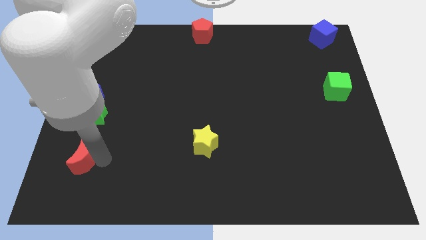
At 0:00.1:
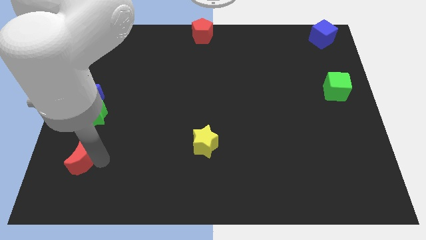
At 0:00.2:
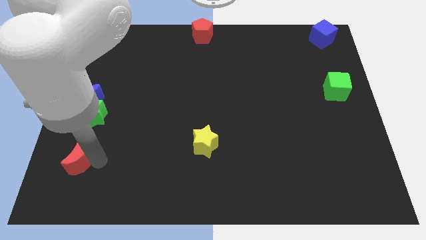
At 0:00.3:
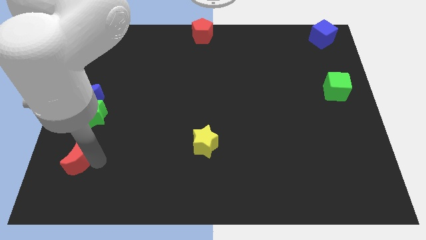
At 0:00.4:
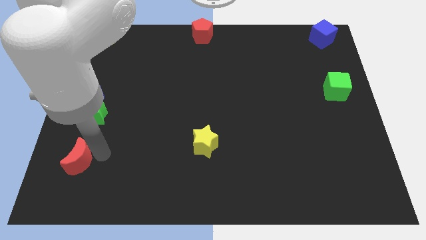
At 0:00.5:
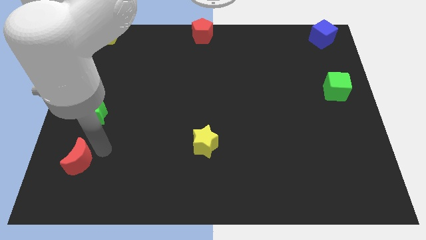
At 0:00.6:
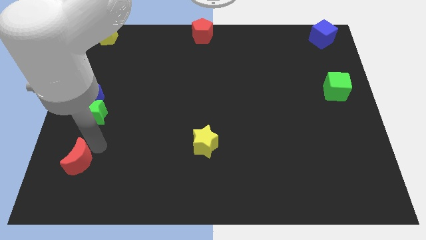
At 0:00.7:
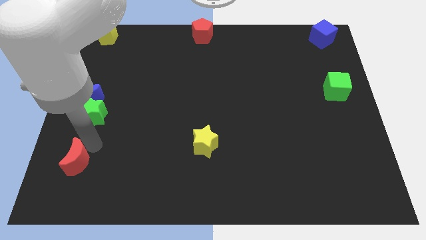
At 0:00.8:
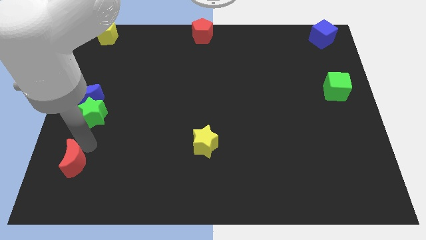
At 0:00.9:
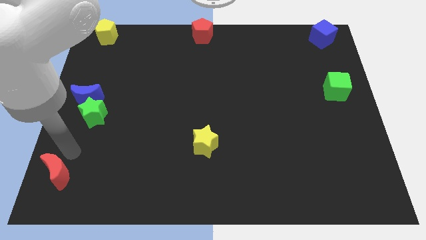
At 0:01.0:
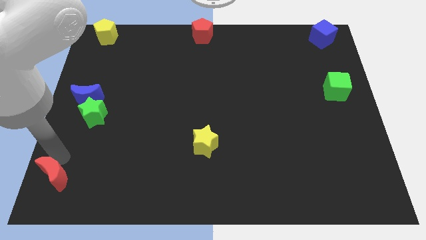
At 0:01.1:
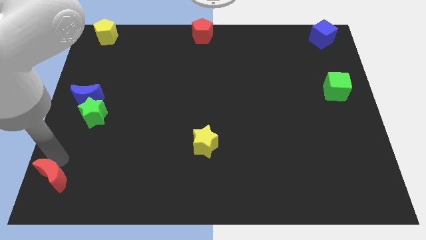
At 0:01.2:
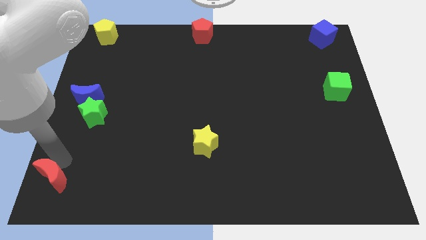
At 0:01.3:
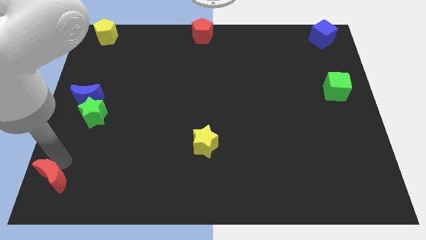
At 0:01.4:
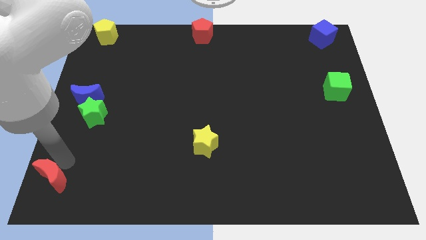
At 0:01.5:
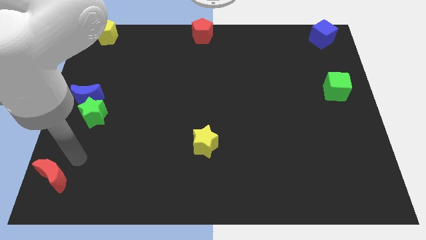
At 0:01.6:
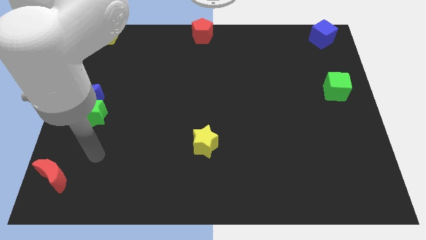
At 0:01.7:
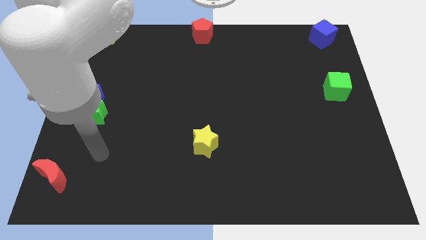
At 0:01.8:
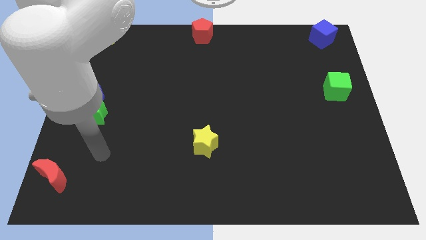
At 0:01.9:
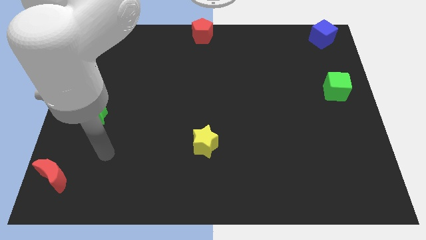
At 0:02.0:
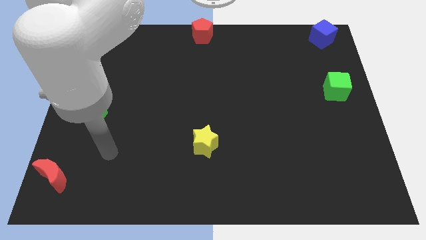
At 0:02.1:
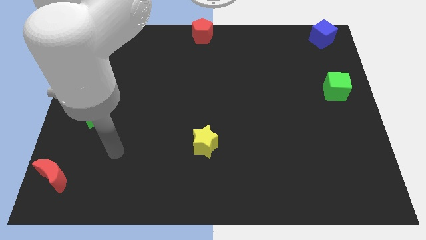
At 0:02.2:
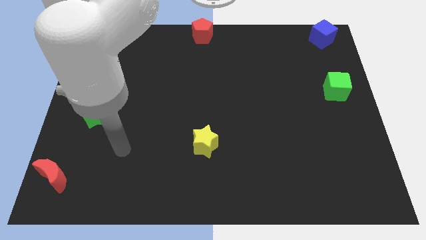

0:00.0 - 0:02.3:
move the red crescent towards bottom left corner of the board

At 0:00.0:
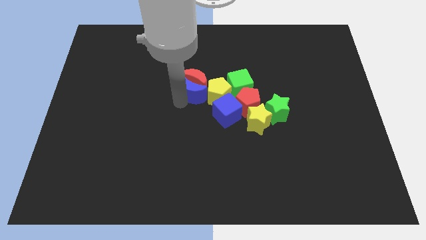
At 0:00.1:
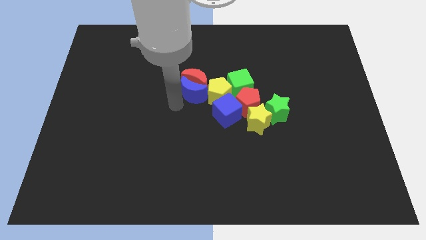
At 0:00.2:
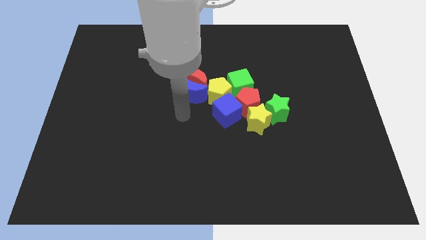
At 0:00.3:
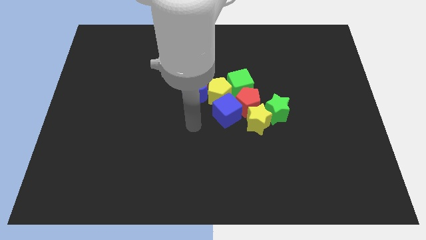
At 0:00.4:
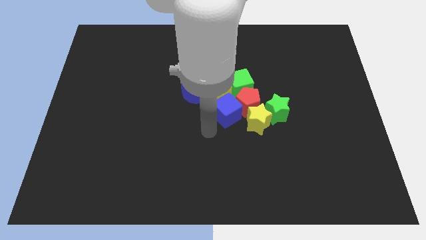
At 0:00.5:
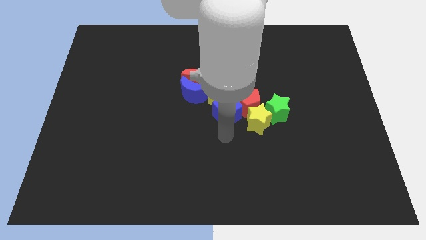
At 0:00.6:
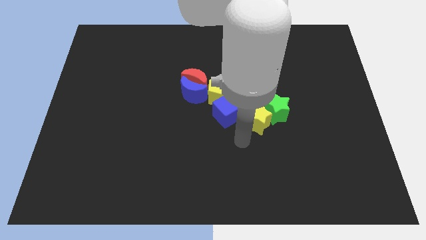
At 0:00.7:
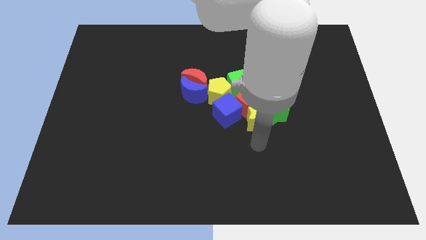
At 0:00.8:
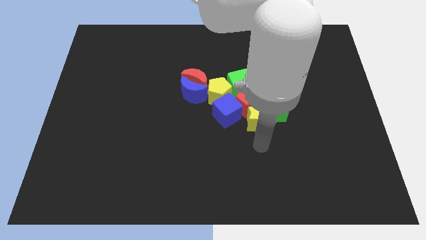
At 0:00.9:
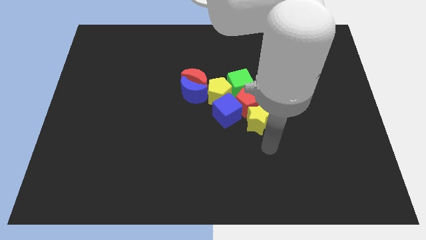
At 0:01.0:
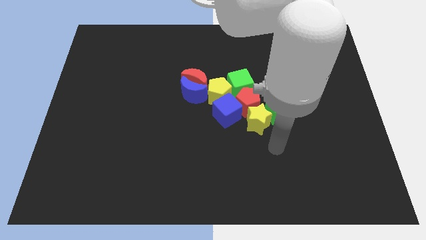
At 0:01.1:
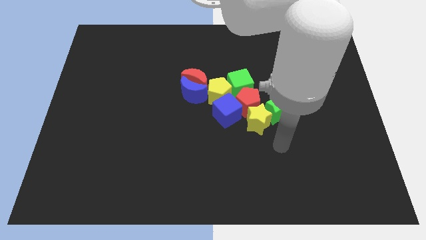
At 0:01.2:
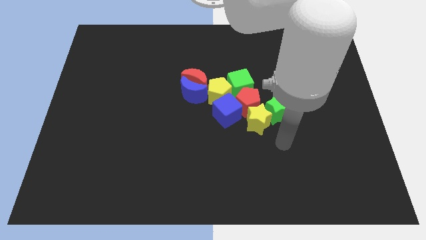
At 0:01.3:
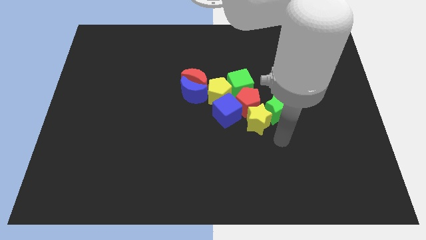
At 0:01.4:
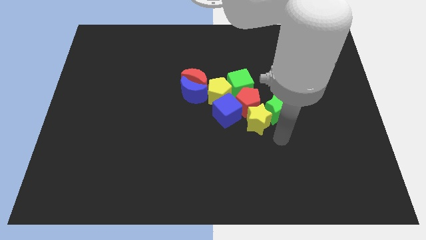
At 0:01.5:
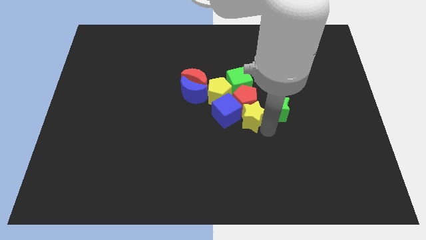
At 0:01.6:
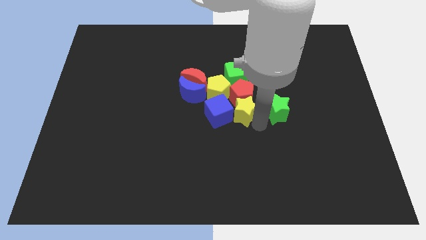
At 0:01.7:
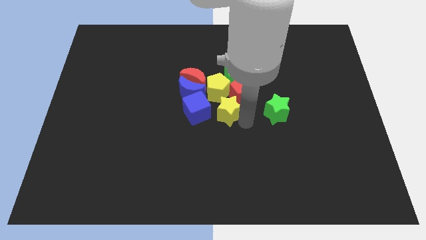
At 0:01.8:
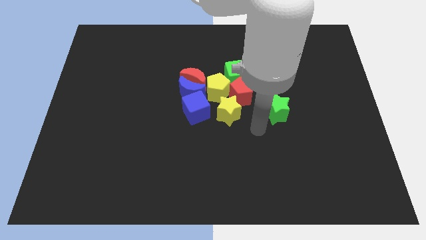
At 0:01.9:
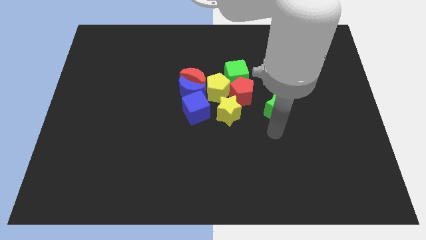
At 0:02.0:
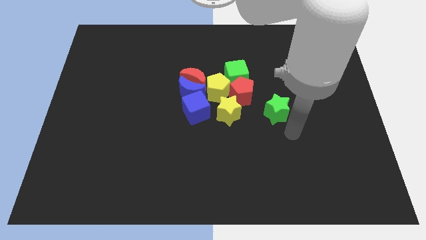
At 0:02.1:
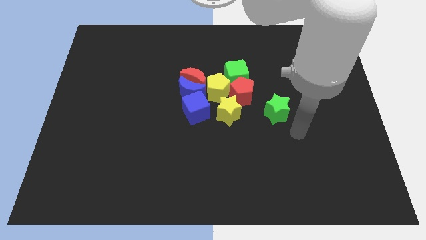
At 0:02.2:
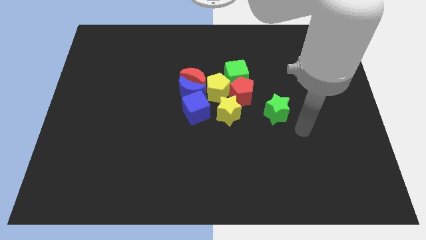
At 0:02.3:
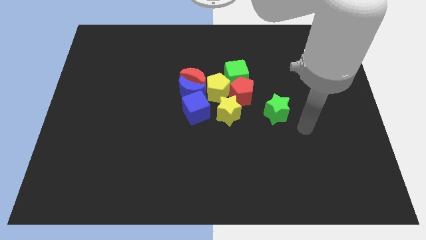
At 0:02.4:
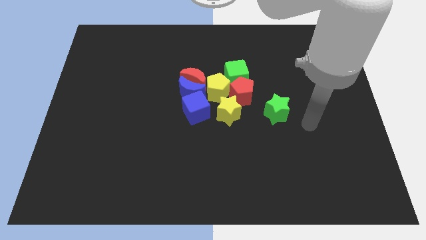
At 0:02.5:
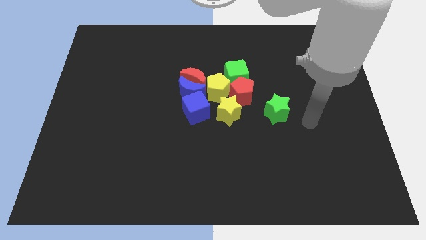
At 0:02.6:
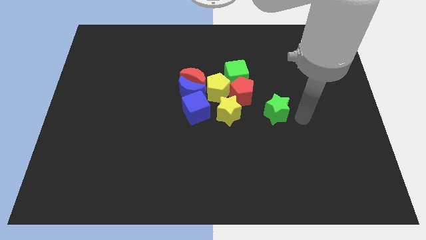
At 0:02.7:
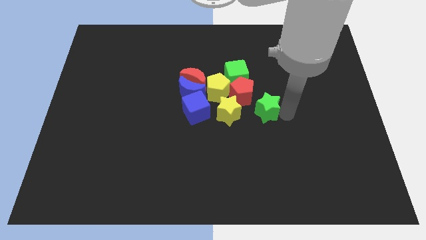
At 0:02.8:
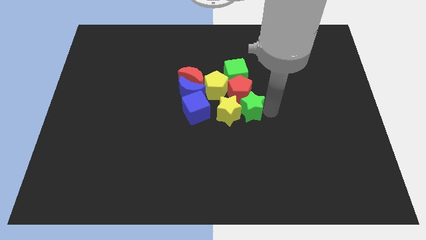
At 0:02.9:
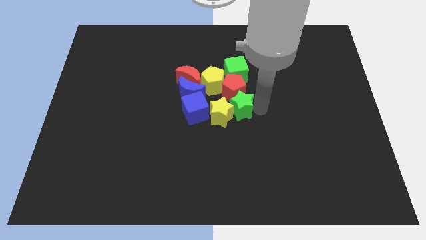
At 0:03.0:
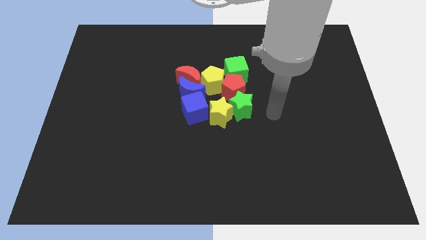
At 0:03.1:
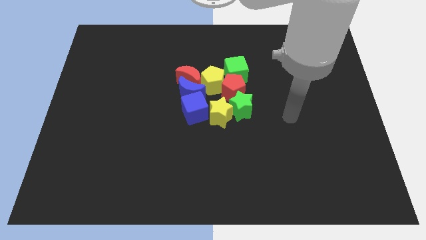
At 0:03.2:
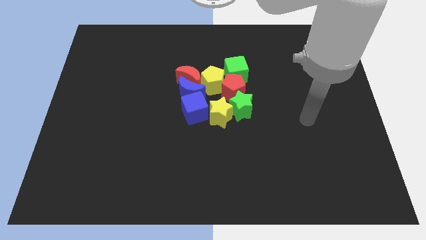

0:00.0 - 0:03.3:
adjust the group of objects at the center of the board

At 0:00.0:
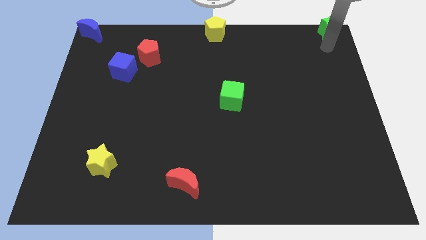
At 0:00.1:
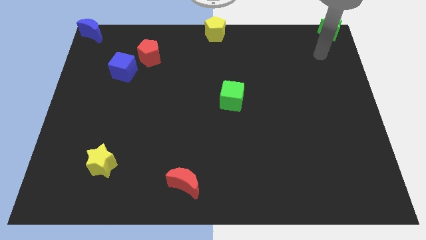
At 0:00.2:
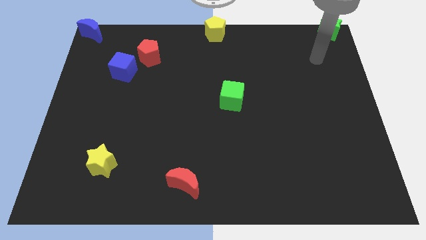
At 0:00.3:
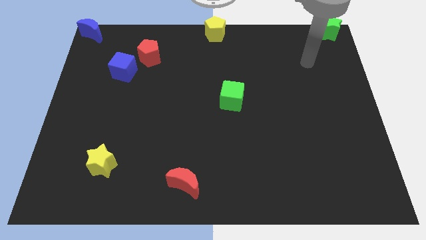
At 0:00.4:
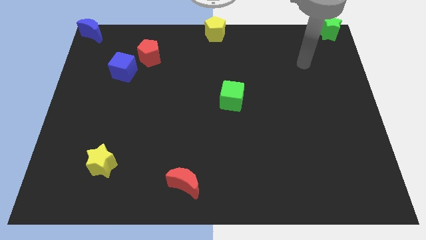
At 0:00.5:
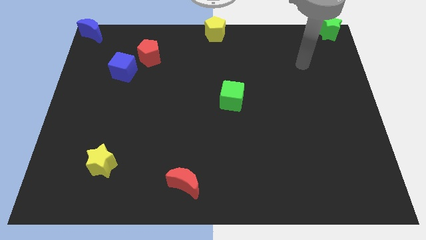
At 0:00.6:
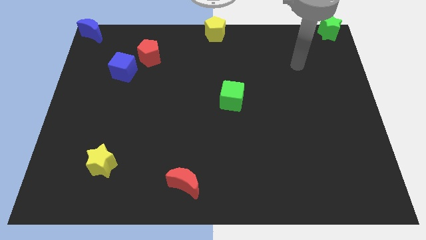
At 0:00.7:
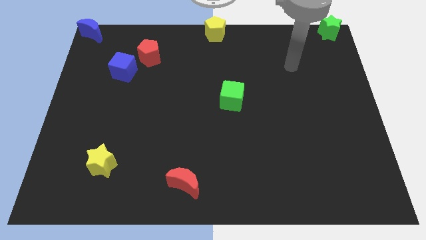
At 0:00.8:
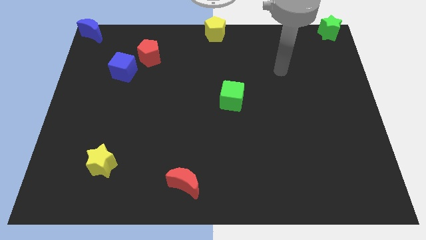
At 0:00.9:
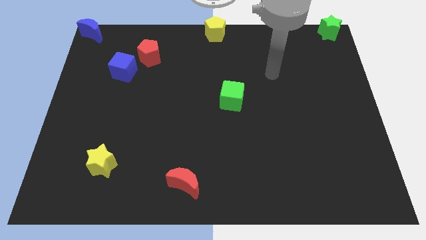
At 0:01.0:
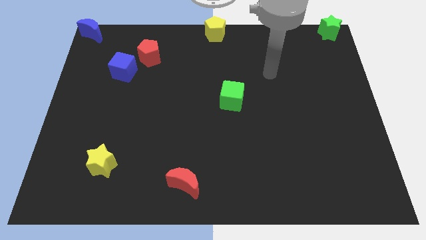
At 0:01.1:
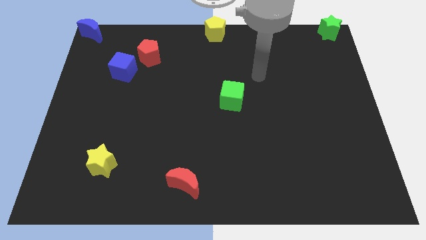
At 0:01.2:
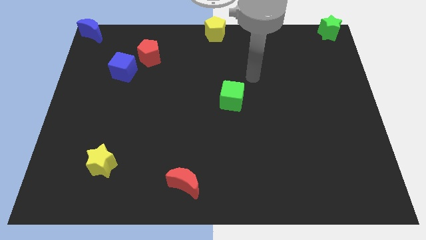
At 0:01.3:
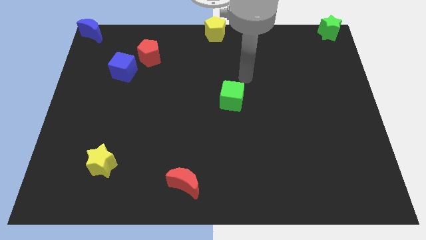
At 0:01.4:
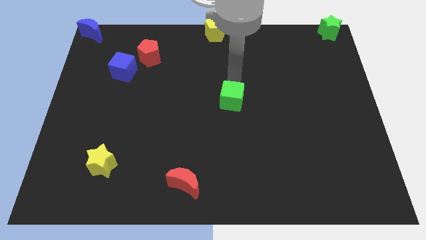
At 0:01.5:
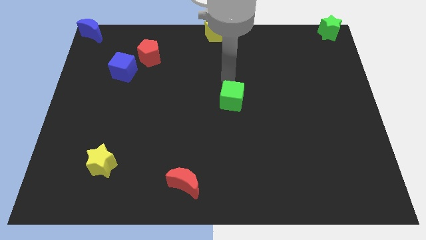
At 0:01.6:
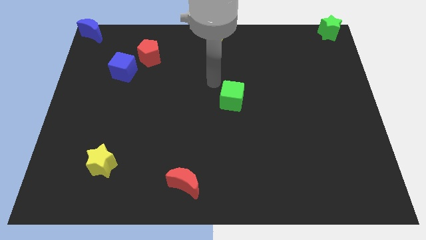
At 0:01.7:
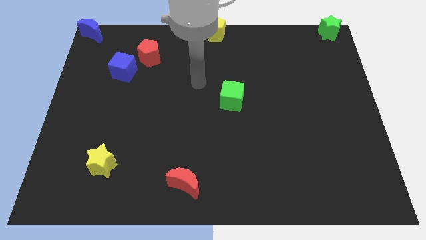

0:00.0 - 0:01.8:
move the arm towards the center of the board

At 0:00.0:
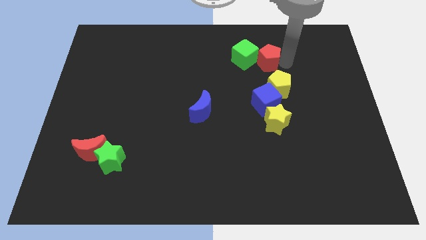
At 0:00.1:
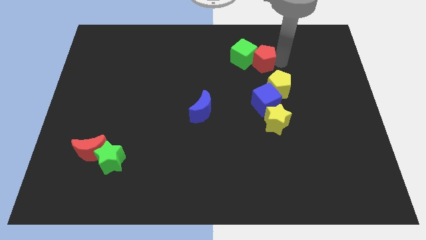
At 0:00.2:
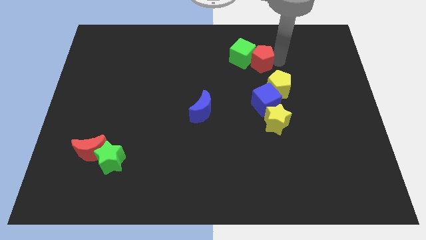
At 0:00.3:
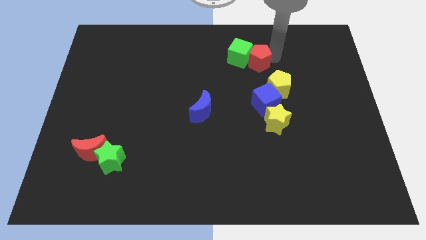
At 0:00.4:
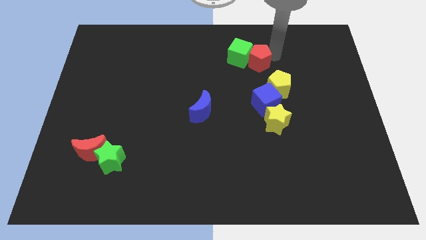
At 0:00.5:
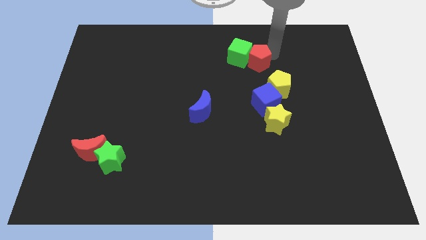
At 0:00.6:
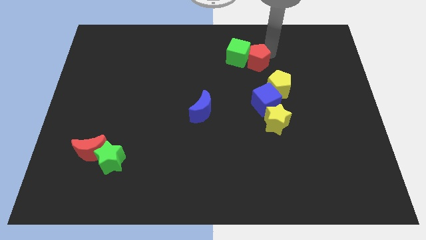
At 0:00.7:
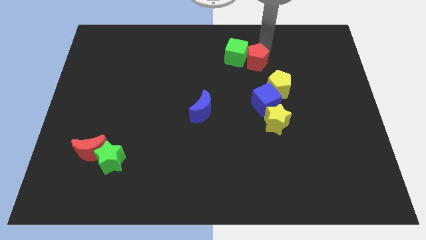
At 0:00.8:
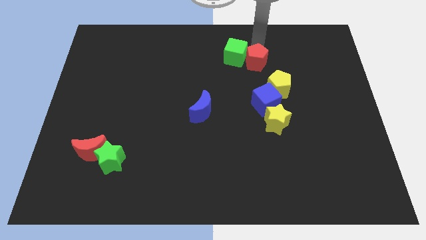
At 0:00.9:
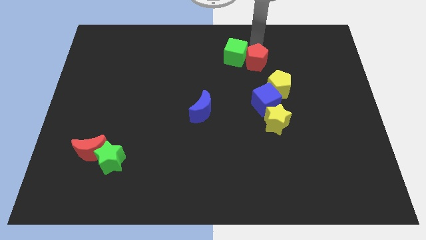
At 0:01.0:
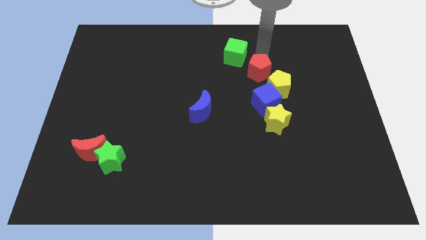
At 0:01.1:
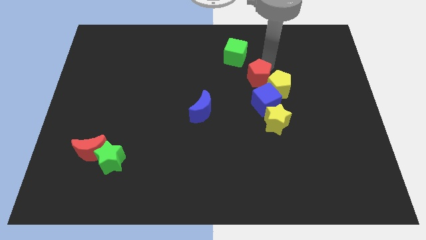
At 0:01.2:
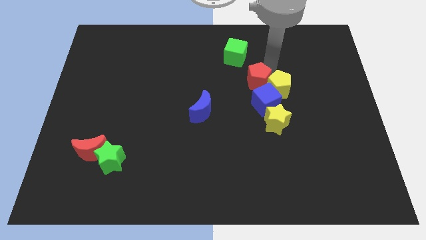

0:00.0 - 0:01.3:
place the red pentagon diagonally top right to the blue moon

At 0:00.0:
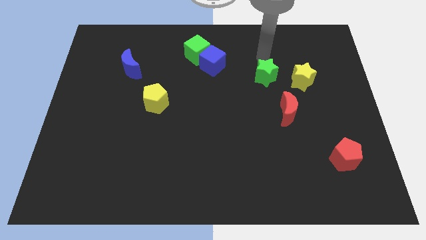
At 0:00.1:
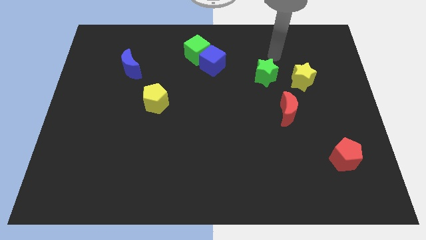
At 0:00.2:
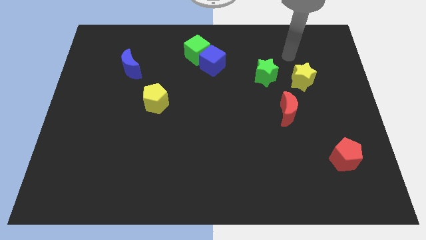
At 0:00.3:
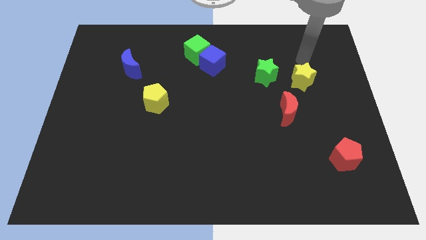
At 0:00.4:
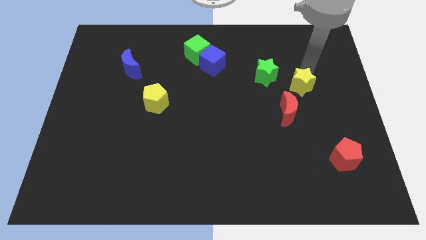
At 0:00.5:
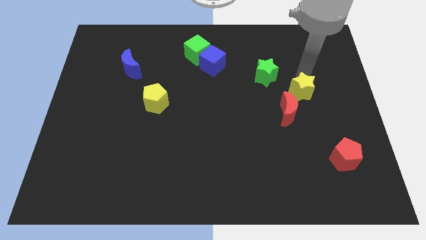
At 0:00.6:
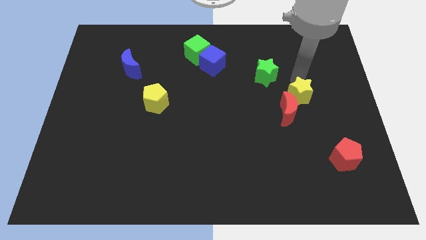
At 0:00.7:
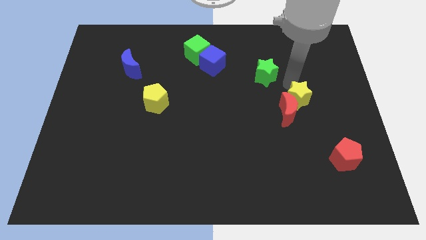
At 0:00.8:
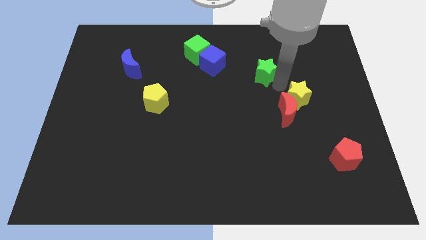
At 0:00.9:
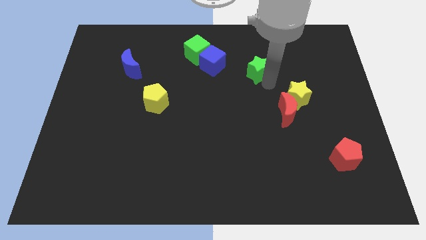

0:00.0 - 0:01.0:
push the yellow star into the red crescent
